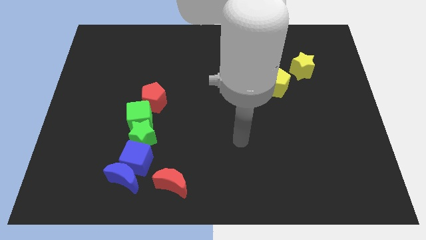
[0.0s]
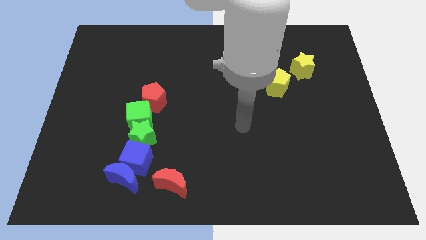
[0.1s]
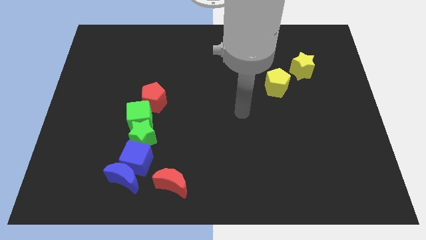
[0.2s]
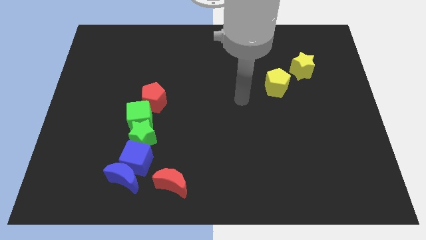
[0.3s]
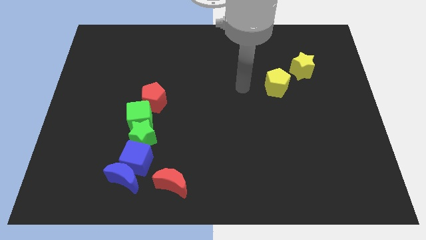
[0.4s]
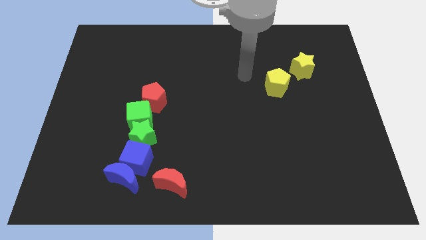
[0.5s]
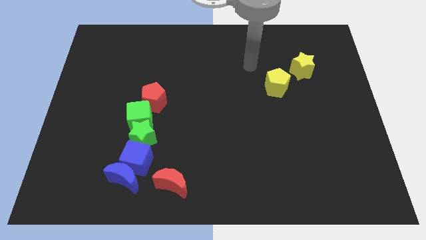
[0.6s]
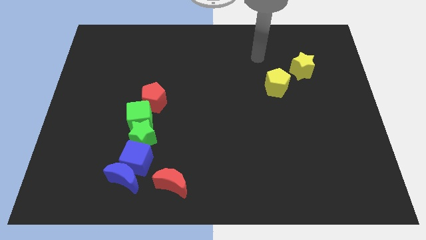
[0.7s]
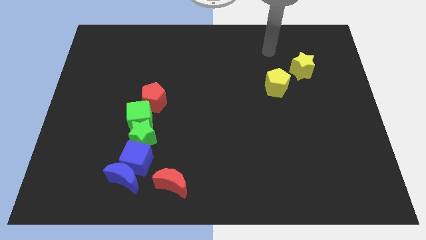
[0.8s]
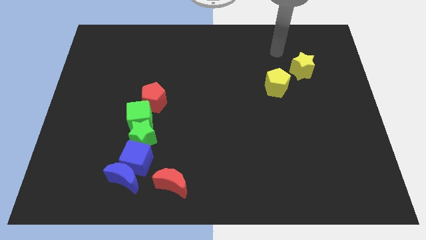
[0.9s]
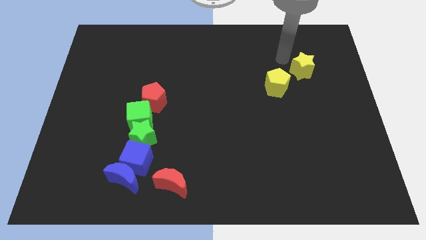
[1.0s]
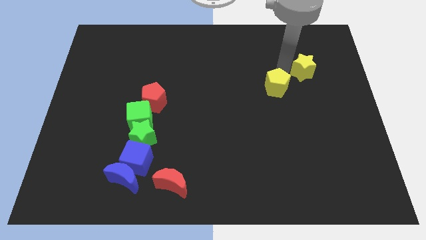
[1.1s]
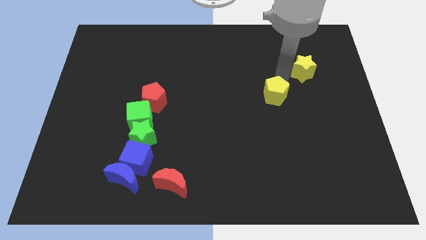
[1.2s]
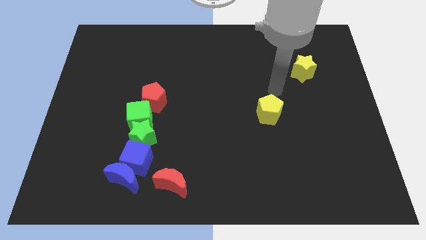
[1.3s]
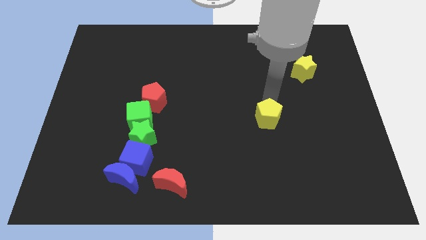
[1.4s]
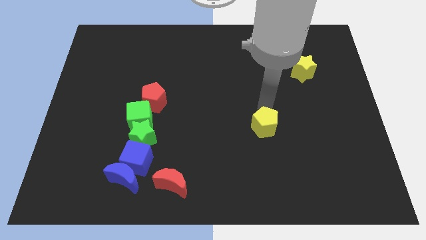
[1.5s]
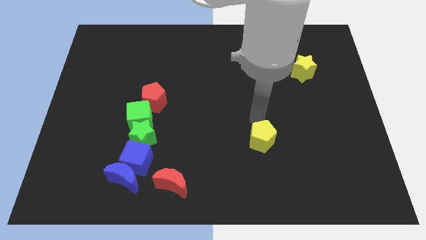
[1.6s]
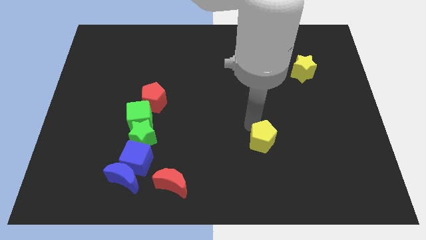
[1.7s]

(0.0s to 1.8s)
push the yellow pentagon towards the bottom side

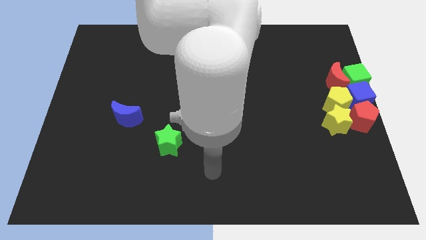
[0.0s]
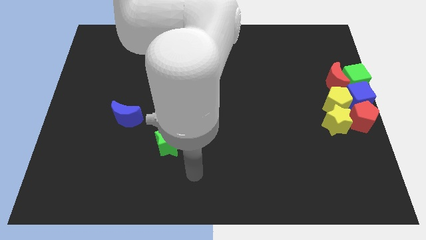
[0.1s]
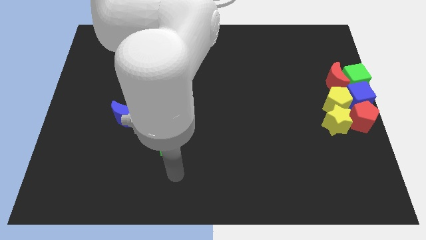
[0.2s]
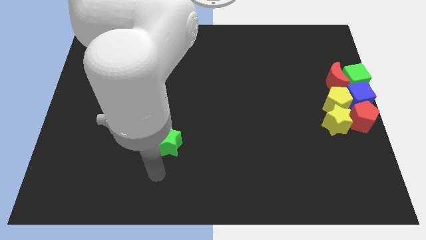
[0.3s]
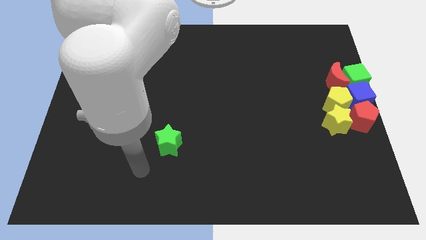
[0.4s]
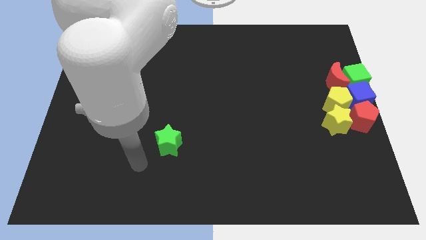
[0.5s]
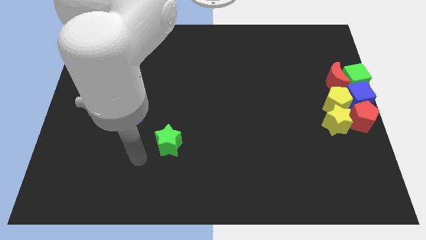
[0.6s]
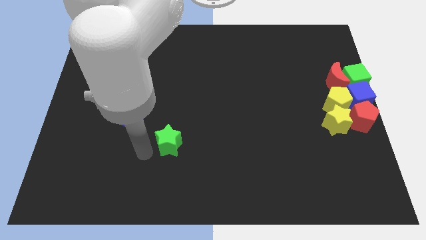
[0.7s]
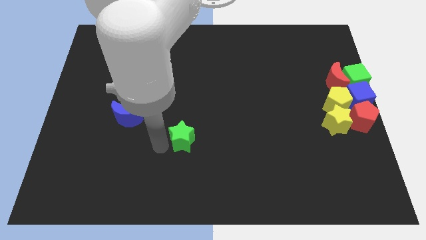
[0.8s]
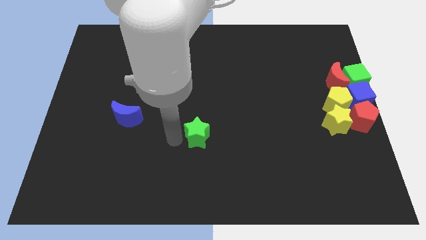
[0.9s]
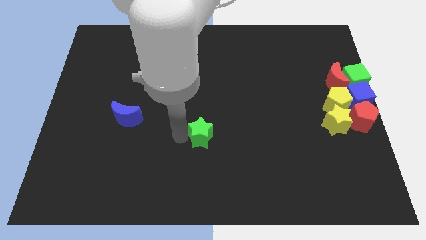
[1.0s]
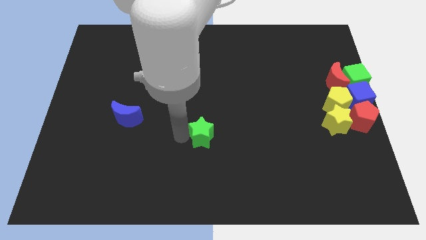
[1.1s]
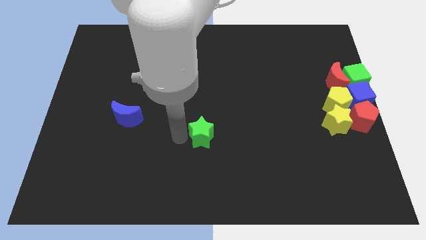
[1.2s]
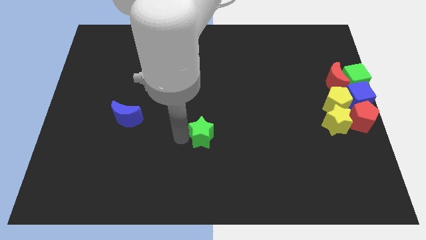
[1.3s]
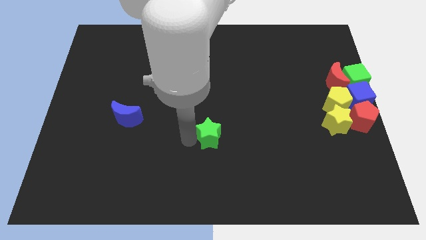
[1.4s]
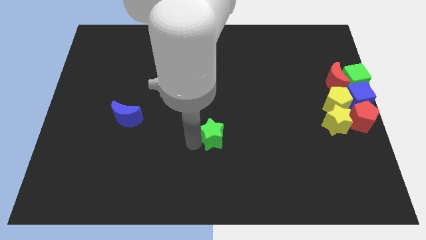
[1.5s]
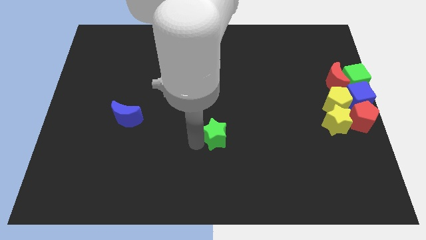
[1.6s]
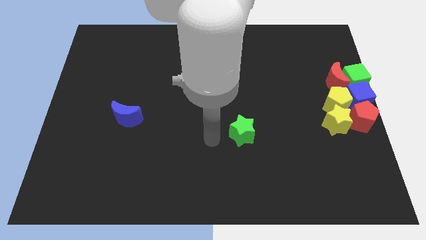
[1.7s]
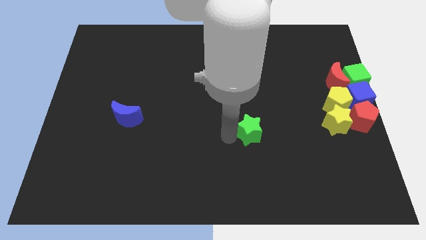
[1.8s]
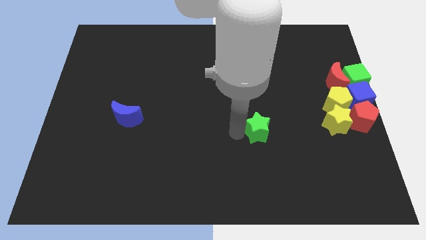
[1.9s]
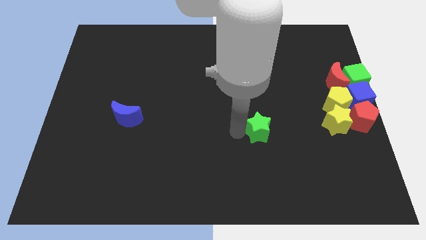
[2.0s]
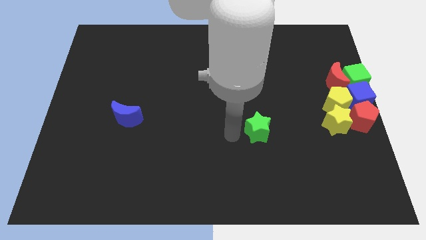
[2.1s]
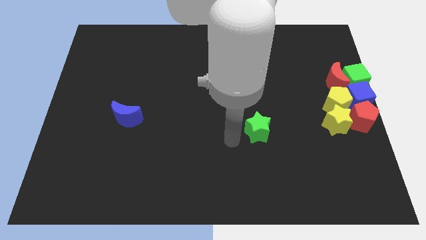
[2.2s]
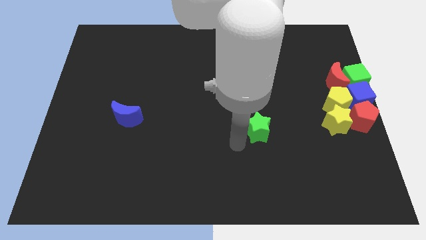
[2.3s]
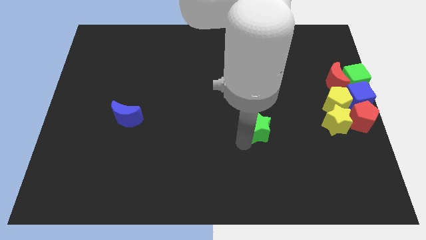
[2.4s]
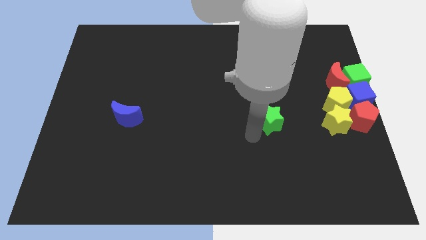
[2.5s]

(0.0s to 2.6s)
place the green star left to the yellow pentagon

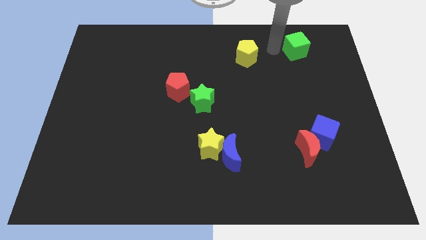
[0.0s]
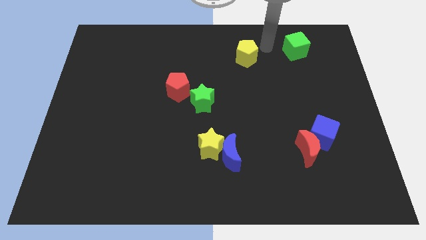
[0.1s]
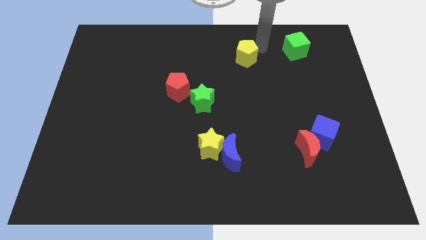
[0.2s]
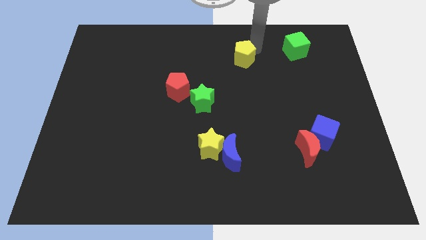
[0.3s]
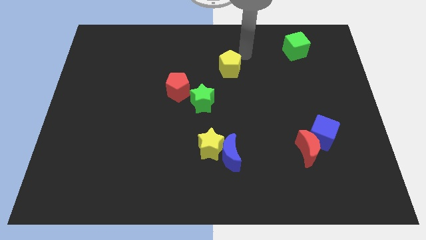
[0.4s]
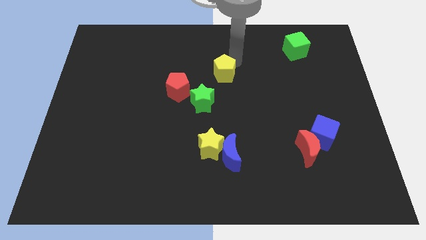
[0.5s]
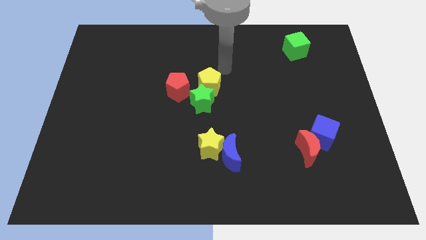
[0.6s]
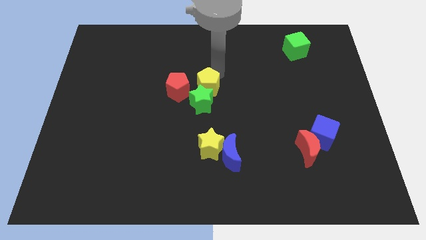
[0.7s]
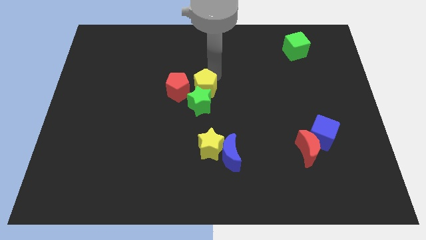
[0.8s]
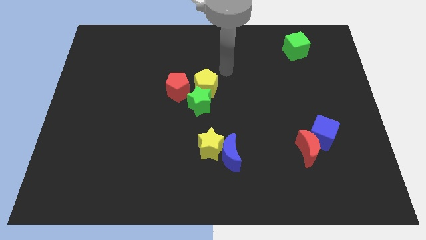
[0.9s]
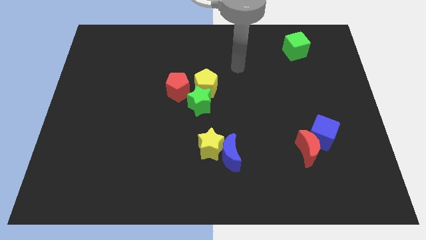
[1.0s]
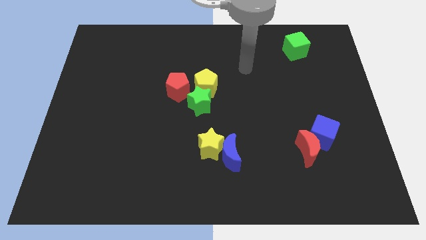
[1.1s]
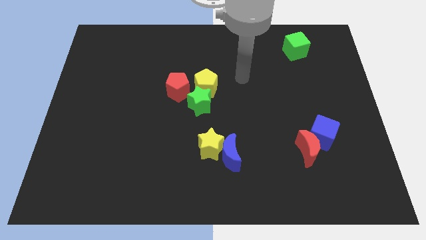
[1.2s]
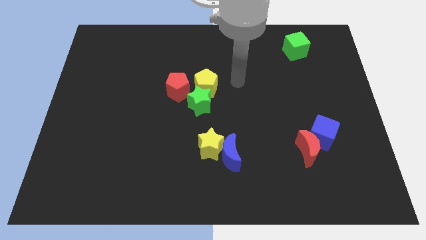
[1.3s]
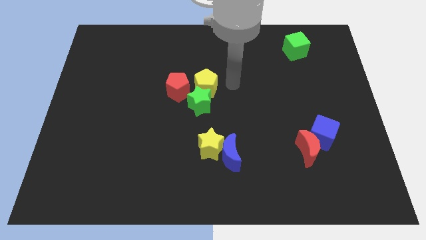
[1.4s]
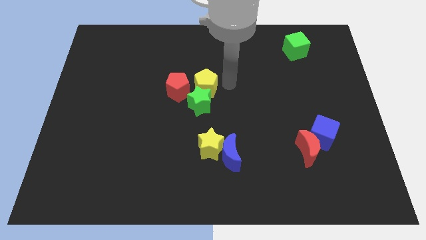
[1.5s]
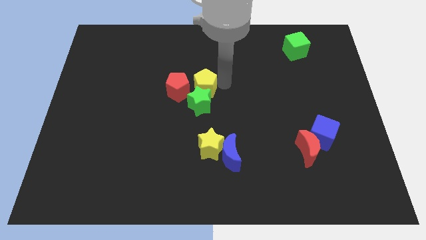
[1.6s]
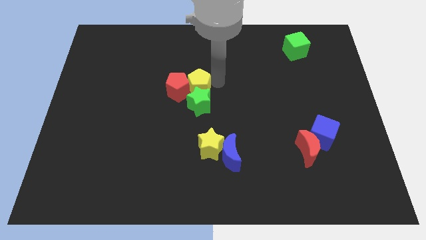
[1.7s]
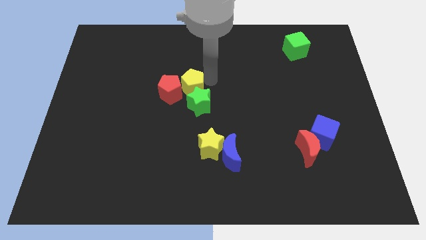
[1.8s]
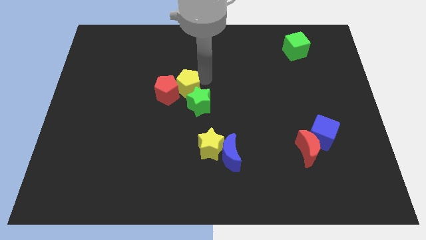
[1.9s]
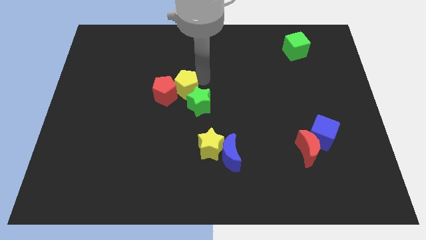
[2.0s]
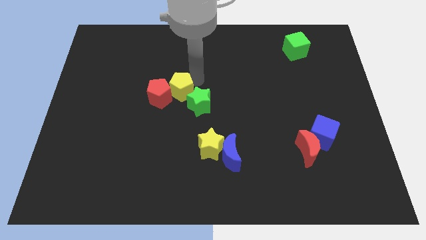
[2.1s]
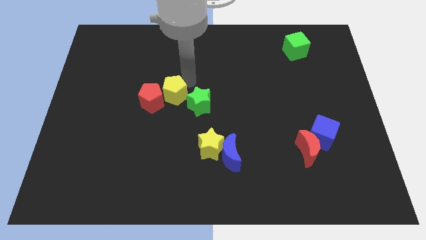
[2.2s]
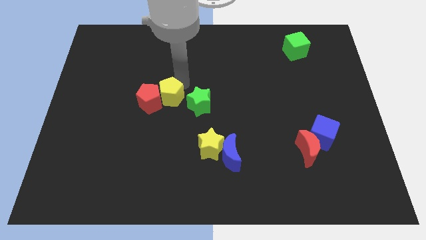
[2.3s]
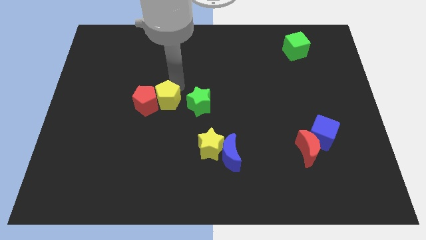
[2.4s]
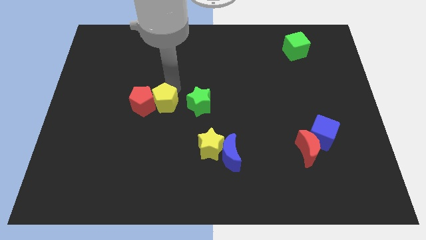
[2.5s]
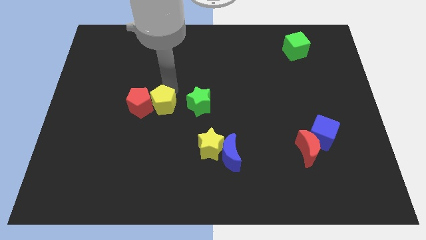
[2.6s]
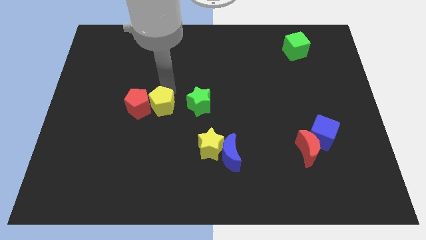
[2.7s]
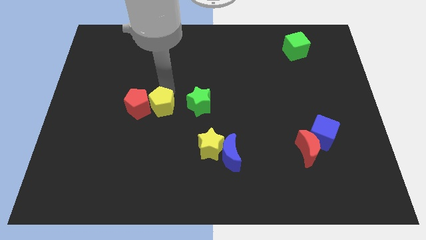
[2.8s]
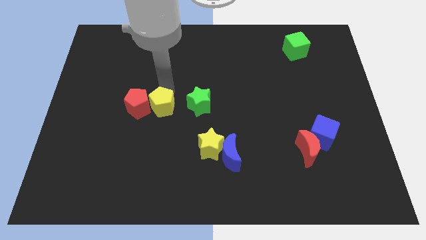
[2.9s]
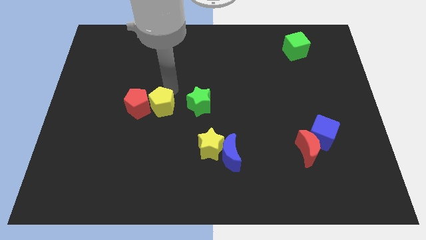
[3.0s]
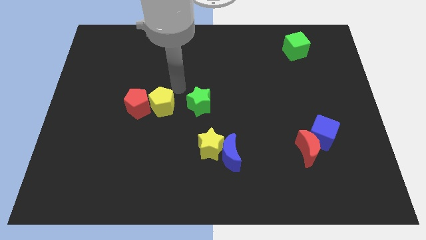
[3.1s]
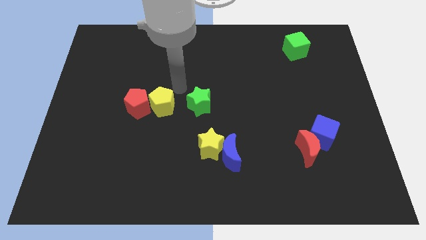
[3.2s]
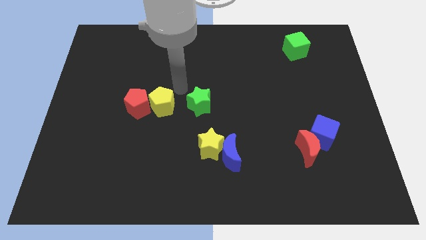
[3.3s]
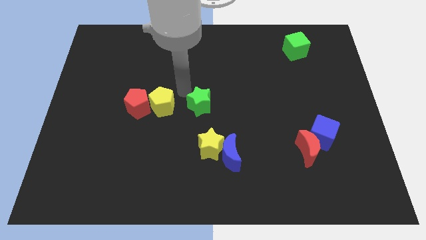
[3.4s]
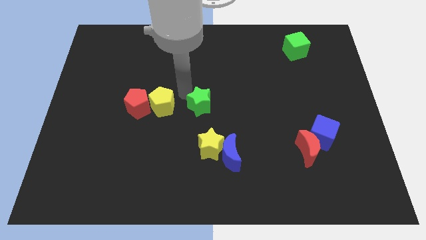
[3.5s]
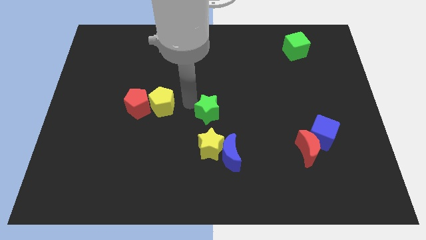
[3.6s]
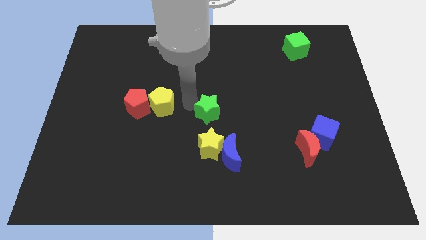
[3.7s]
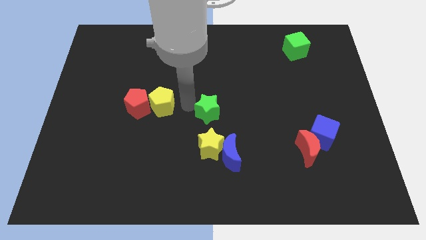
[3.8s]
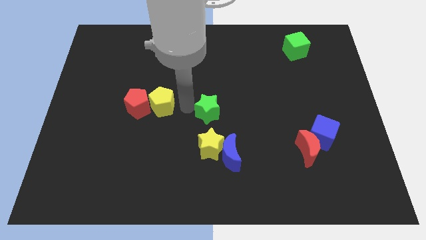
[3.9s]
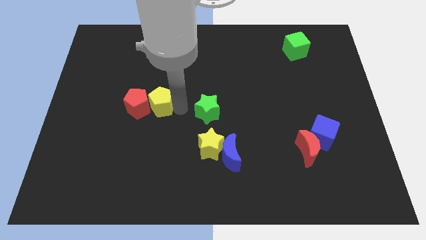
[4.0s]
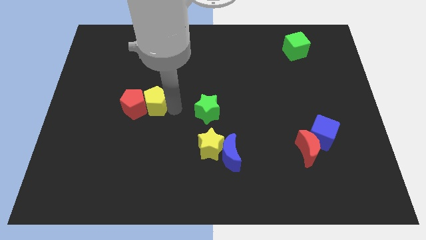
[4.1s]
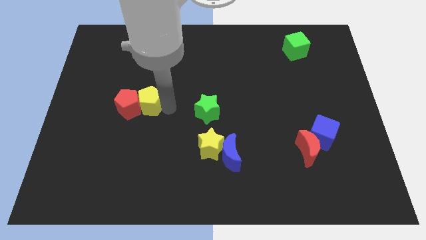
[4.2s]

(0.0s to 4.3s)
push the yellow pentagon into the red pentagon
